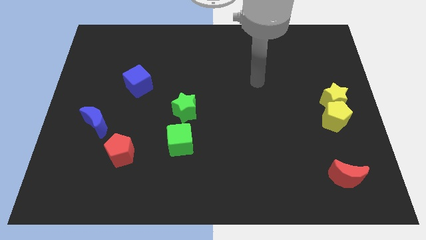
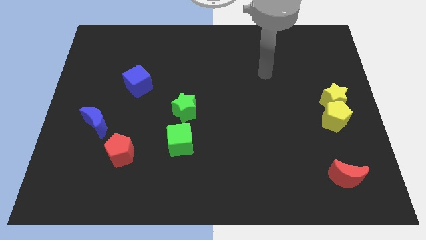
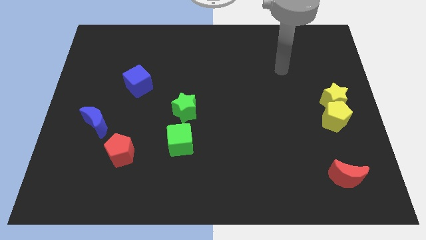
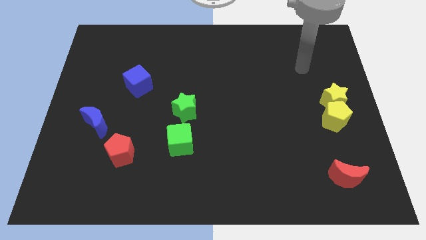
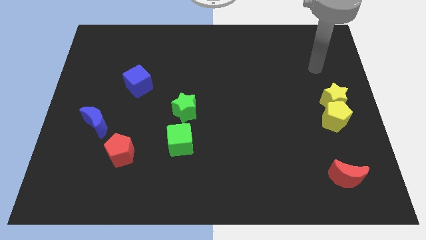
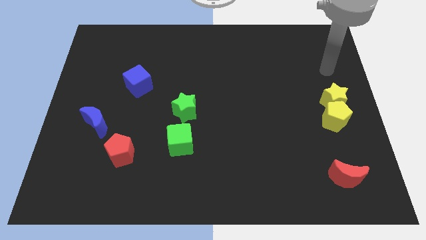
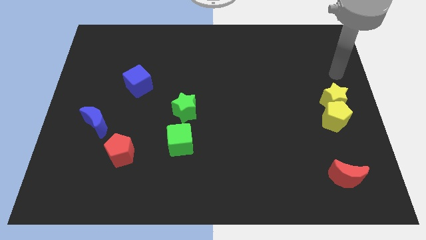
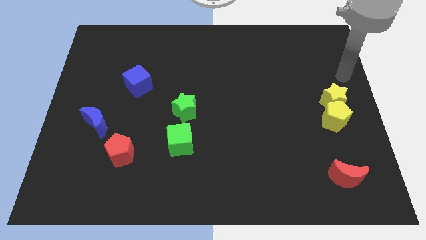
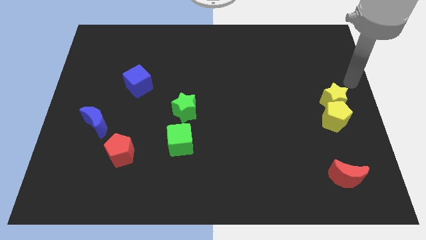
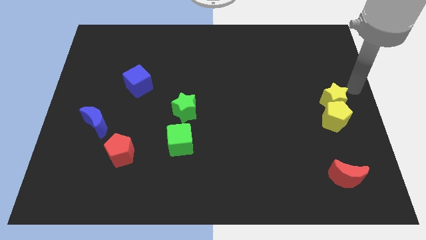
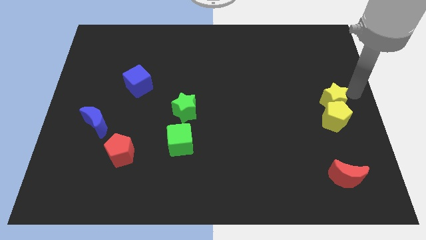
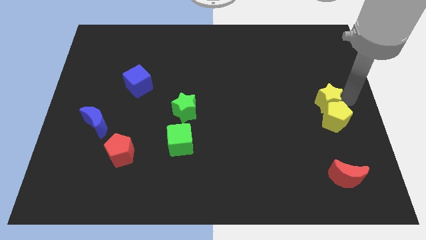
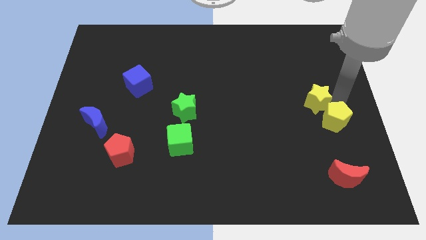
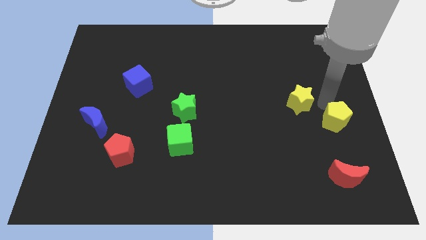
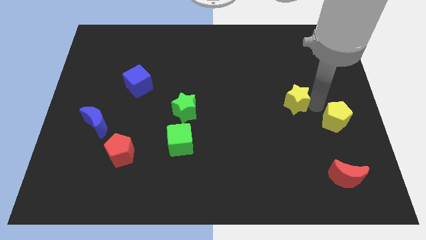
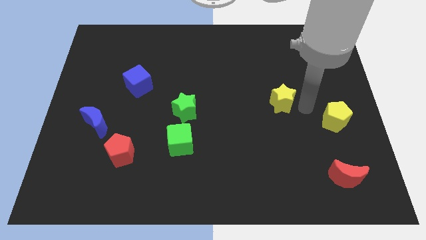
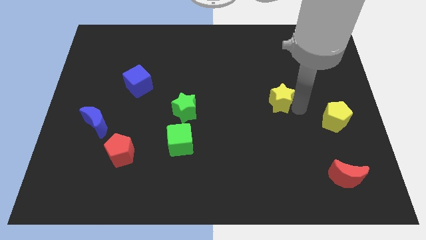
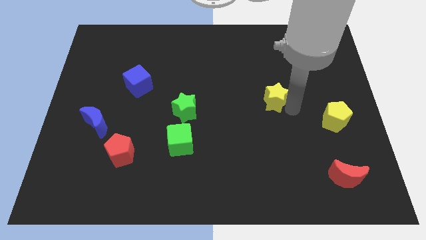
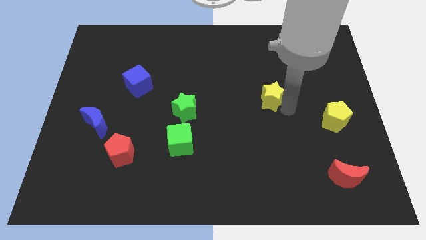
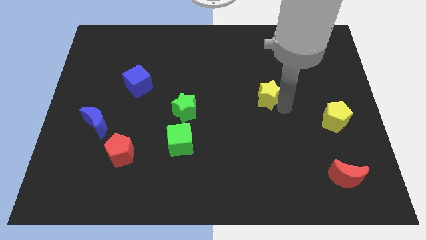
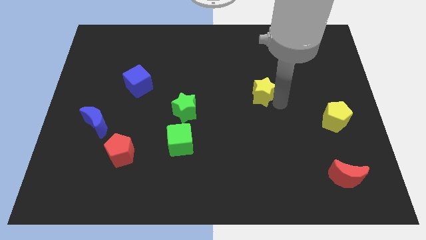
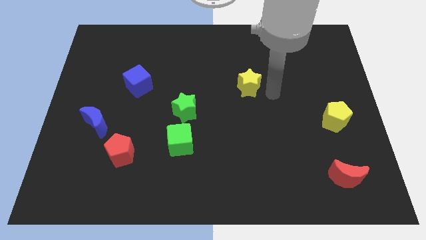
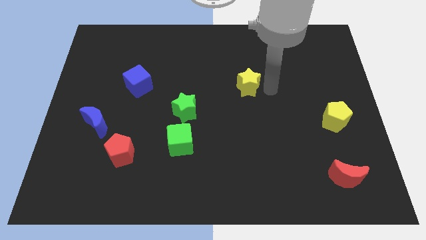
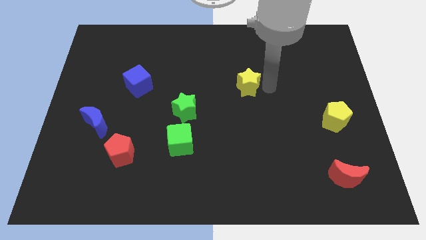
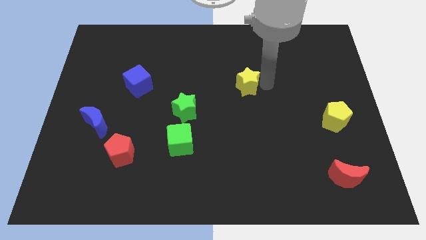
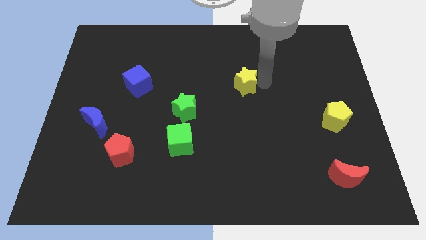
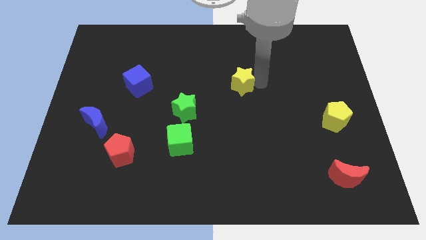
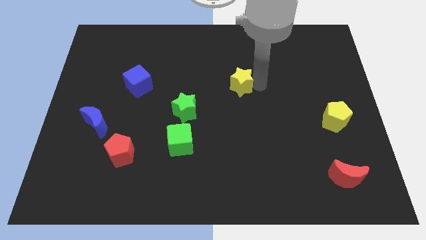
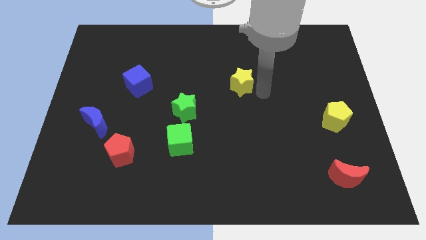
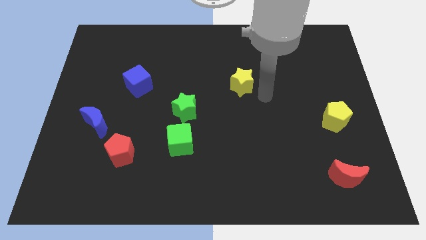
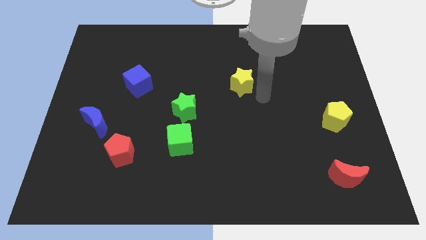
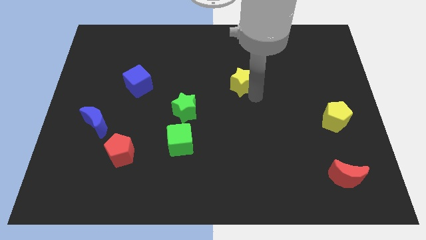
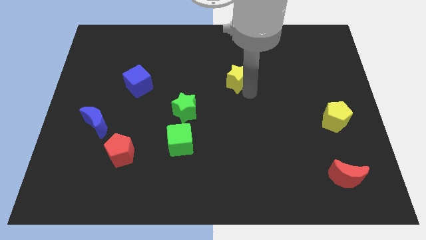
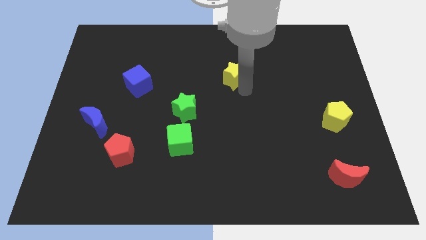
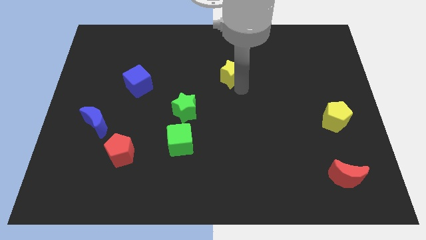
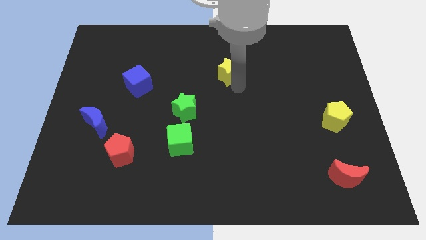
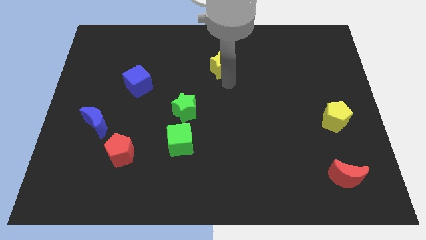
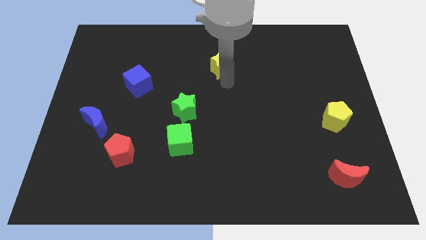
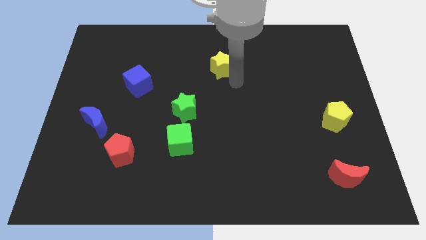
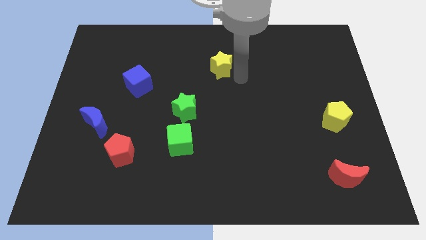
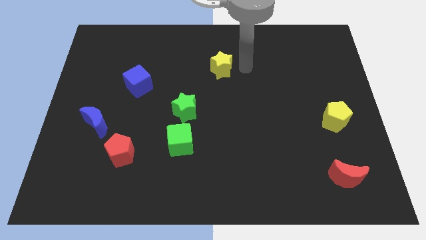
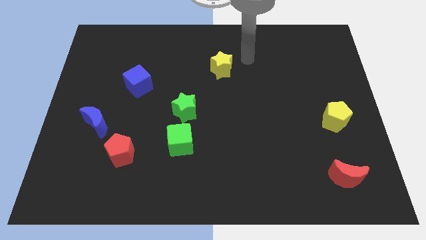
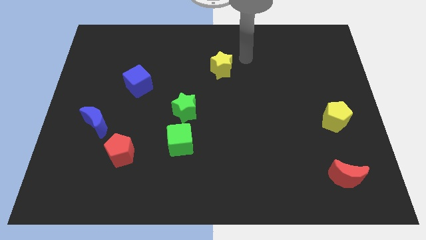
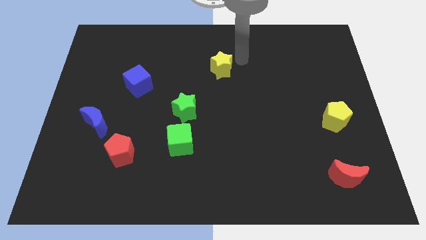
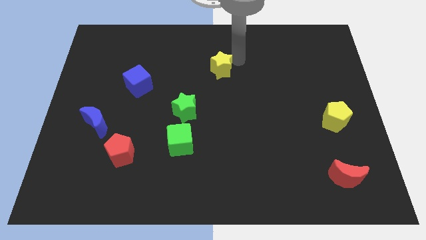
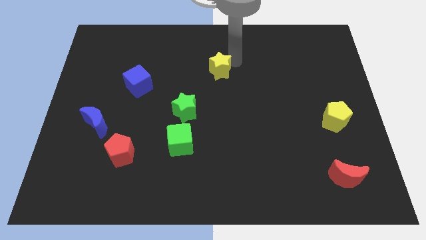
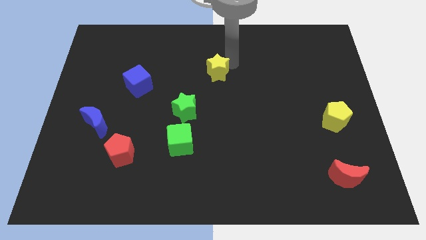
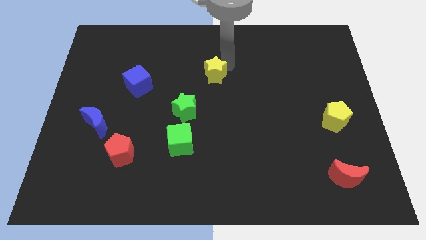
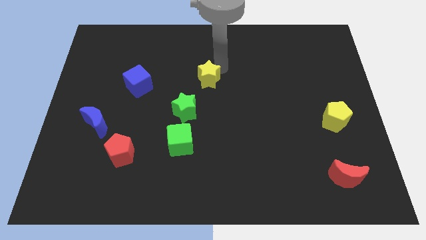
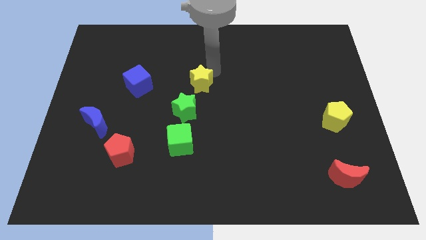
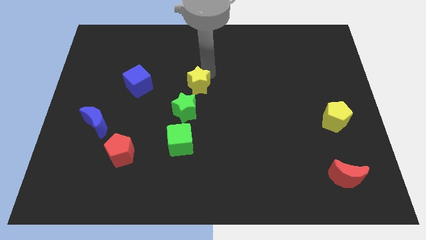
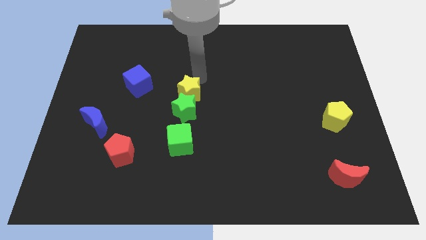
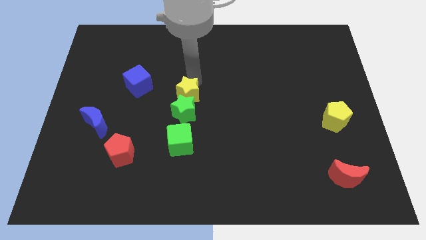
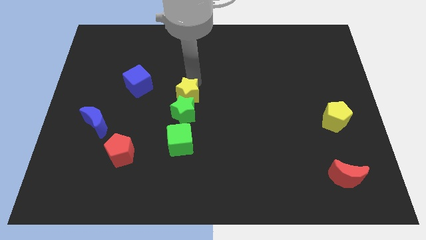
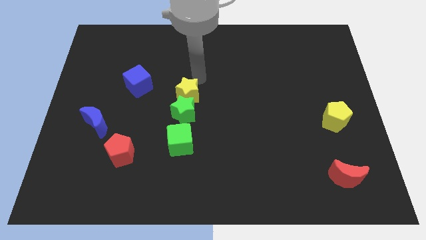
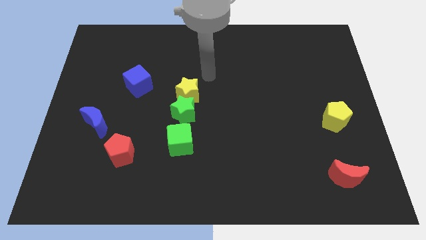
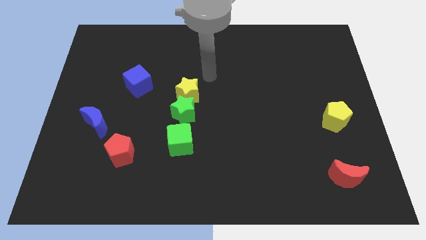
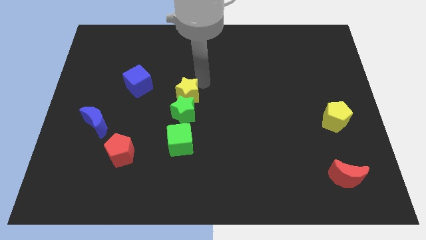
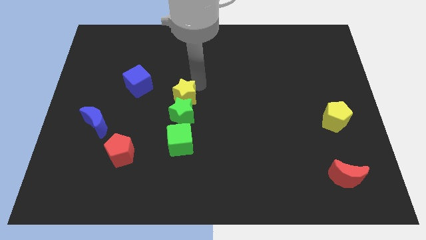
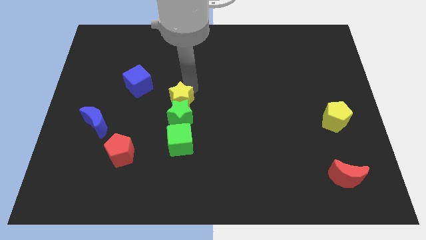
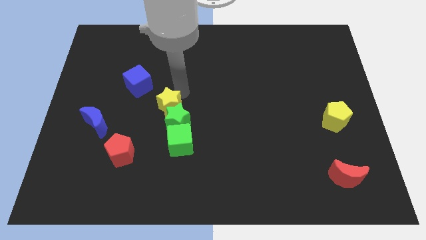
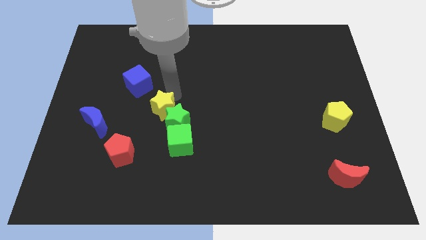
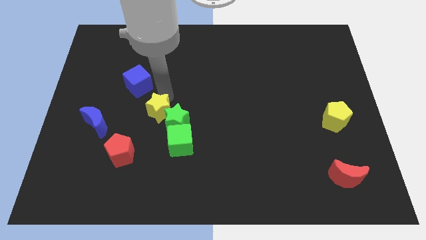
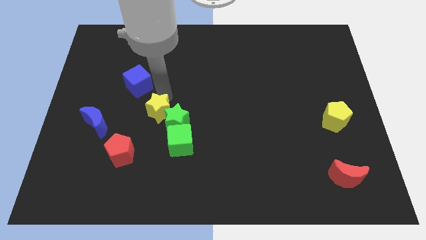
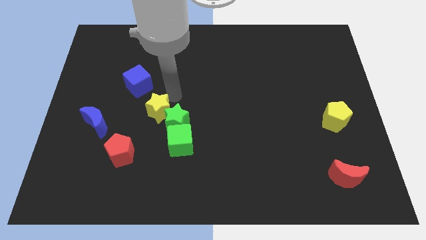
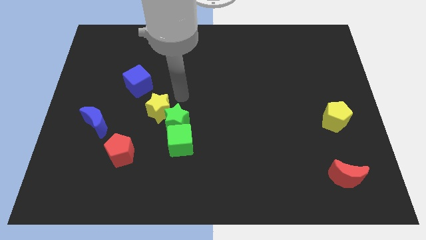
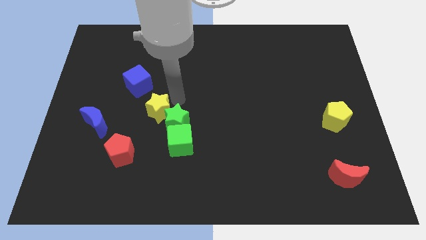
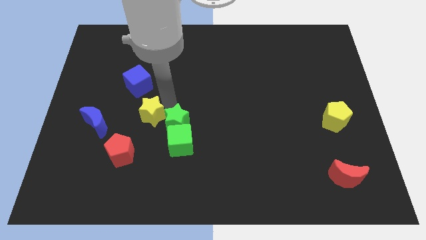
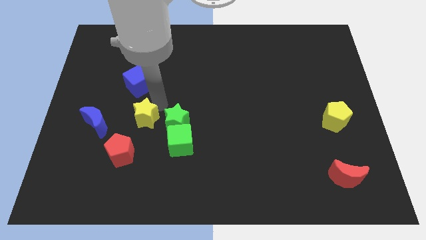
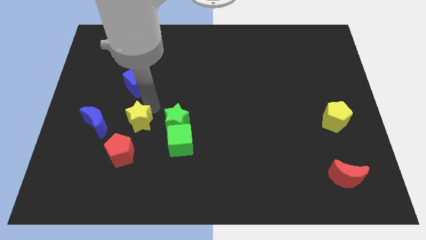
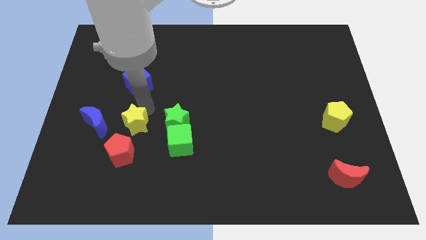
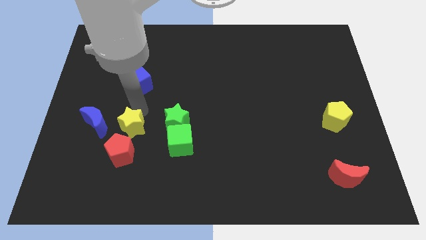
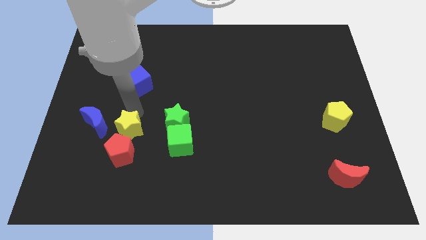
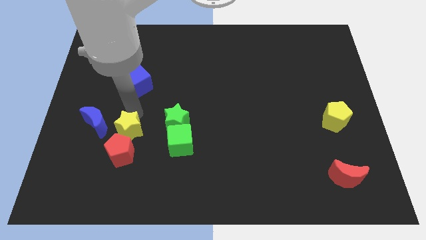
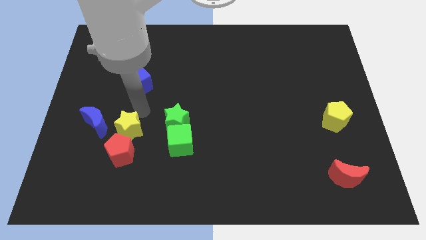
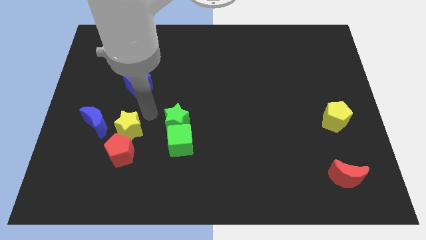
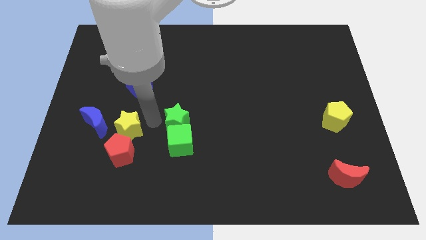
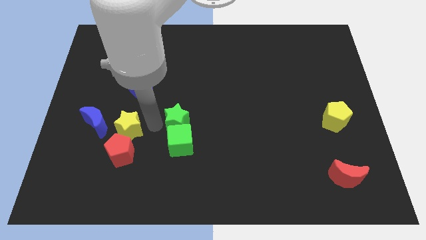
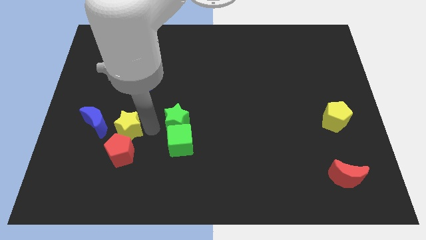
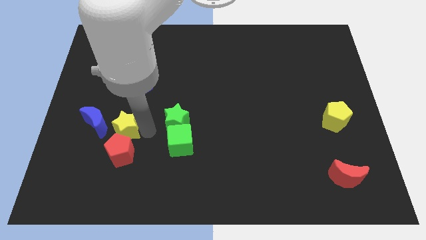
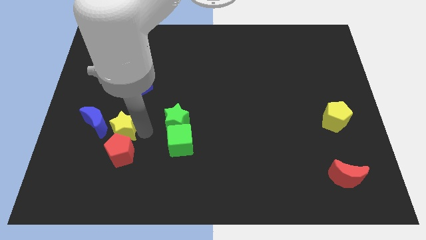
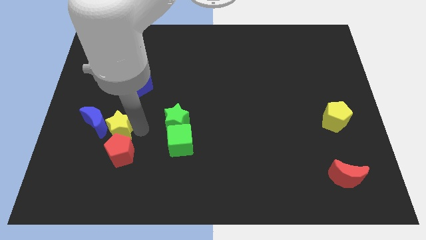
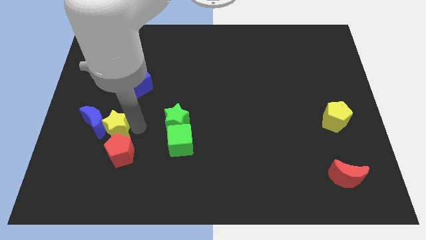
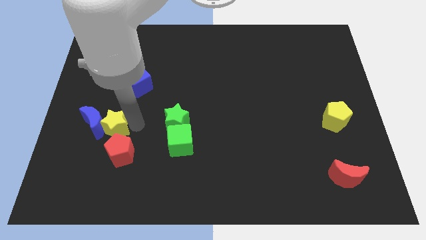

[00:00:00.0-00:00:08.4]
push the yellow star towards the blue moon
